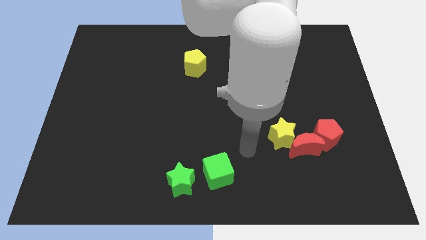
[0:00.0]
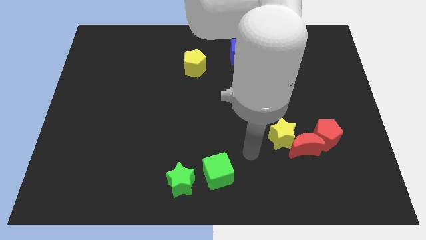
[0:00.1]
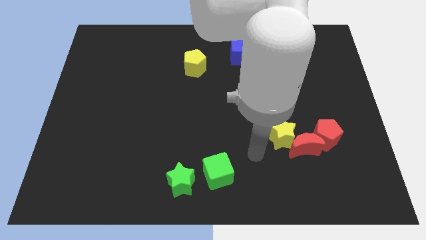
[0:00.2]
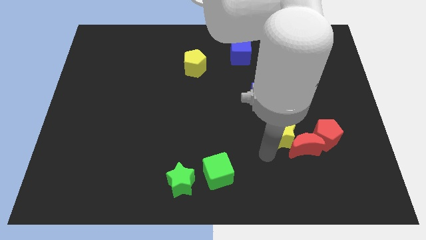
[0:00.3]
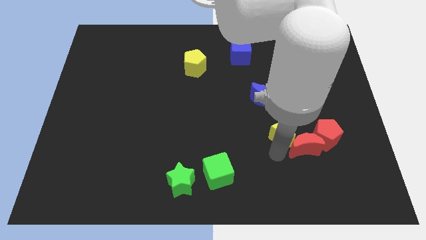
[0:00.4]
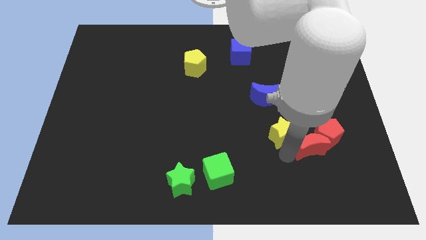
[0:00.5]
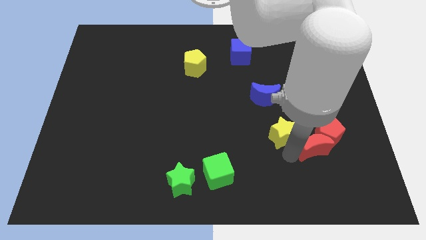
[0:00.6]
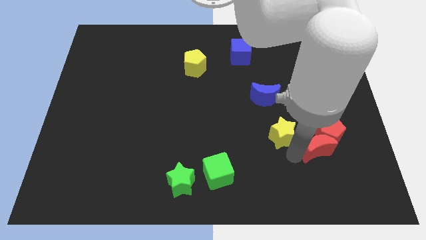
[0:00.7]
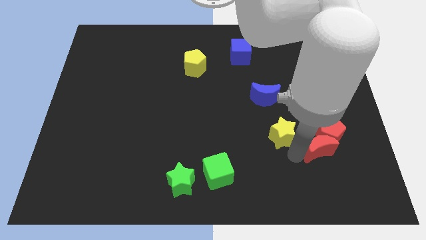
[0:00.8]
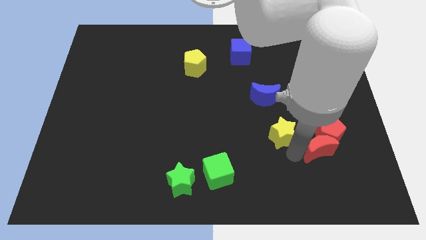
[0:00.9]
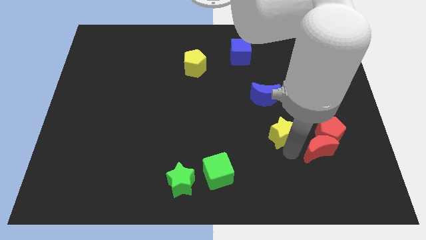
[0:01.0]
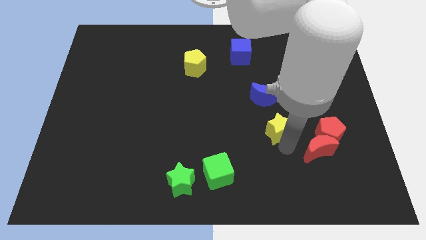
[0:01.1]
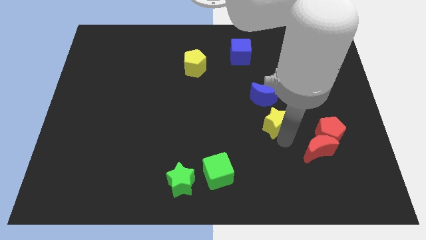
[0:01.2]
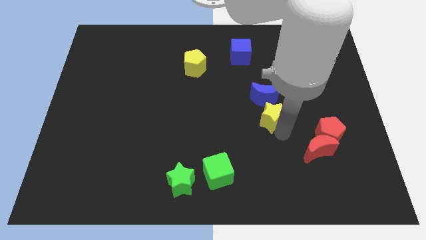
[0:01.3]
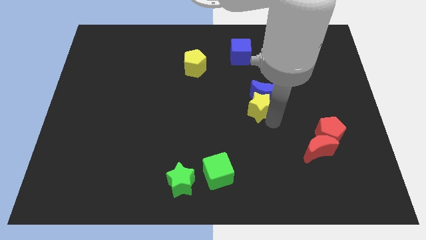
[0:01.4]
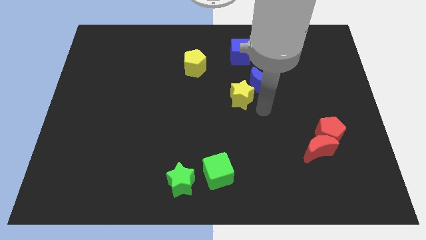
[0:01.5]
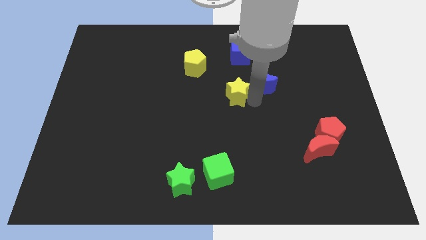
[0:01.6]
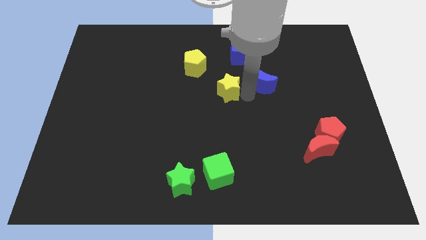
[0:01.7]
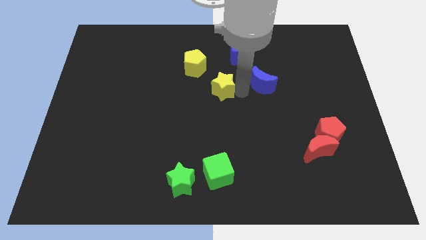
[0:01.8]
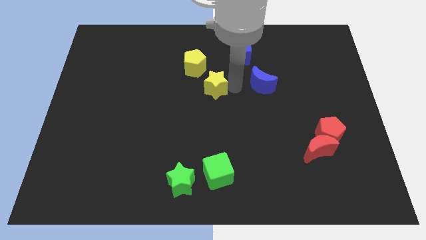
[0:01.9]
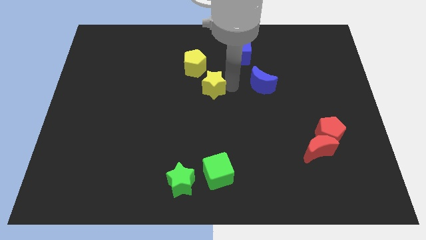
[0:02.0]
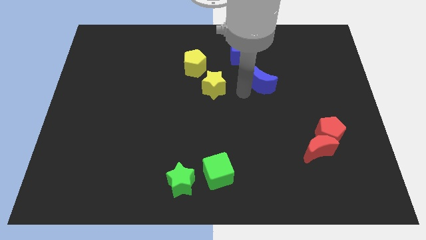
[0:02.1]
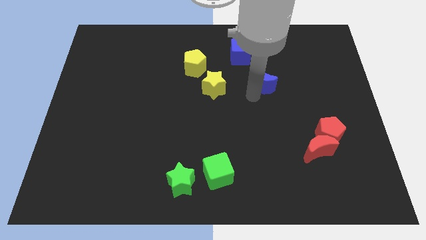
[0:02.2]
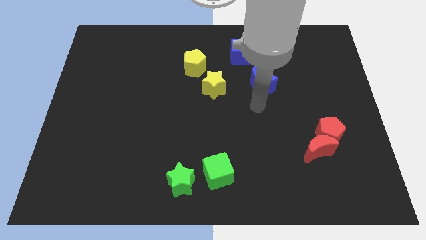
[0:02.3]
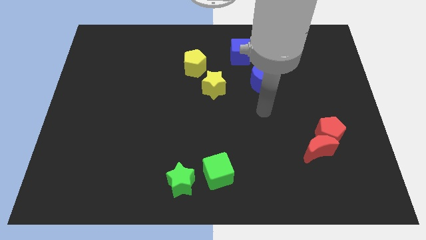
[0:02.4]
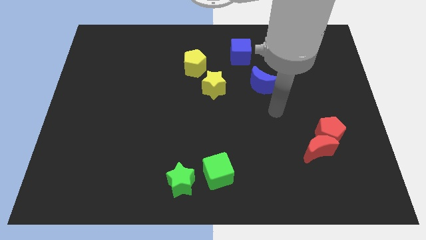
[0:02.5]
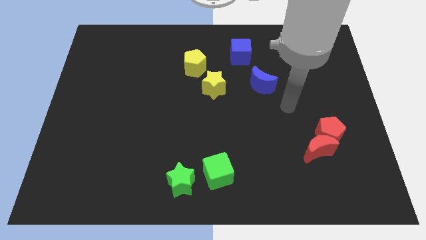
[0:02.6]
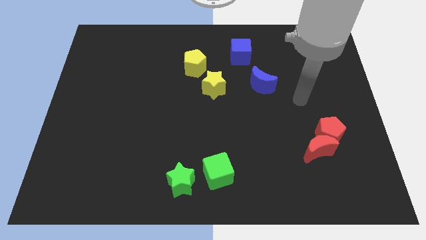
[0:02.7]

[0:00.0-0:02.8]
push yellow star towards yellow pentagon

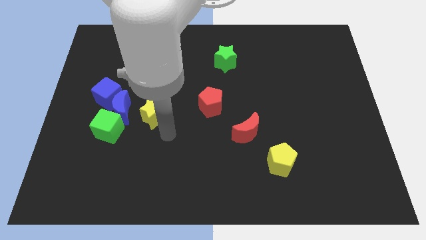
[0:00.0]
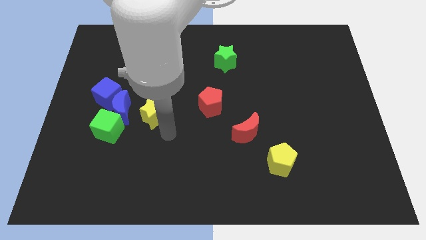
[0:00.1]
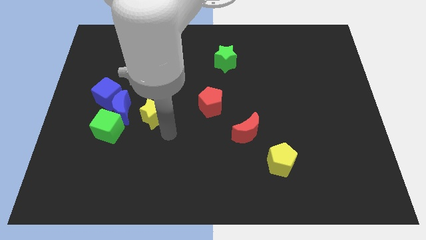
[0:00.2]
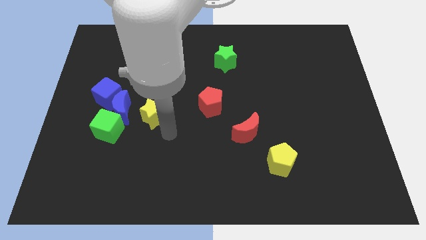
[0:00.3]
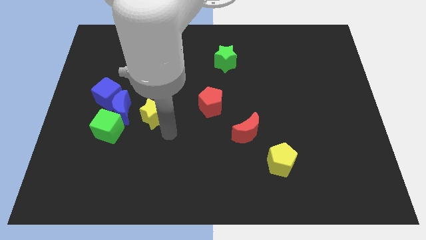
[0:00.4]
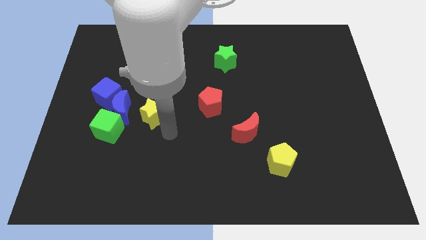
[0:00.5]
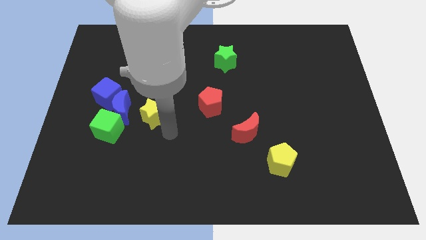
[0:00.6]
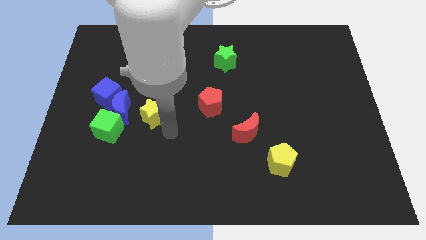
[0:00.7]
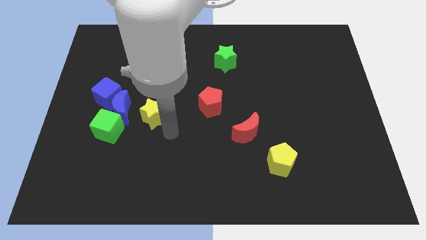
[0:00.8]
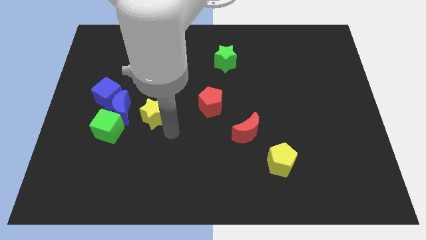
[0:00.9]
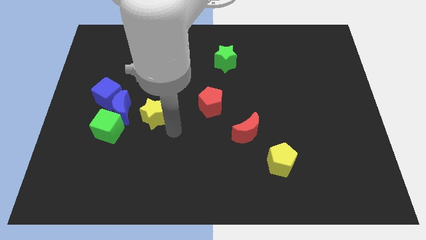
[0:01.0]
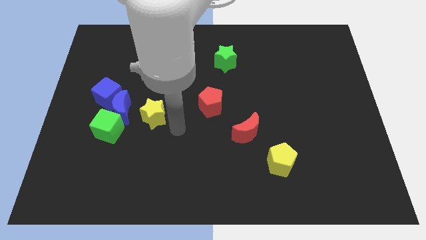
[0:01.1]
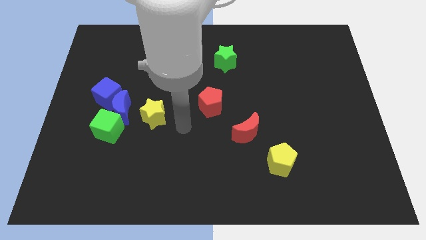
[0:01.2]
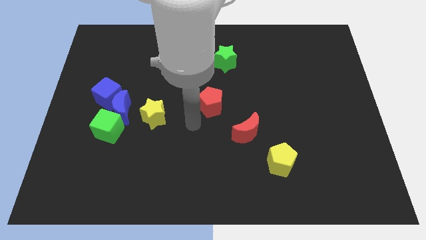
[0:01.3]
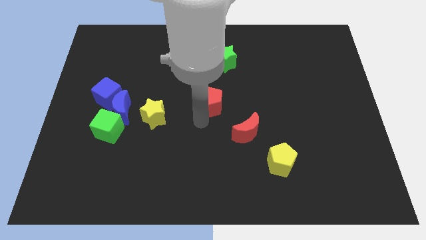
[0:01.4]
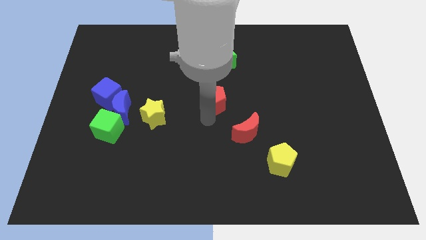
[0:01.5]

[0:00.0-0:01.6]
slightly push the red pentagon to the top of the board

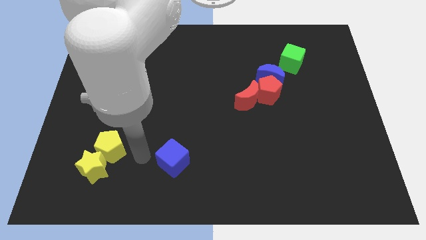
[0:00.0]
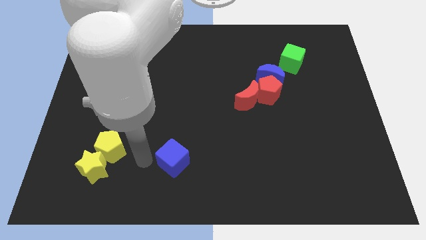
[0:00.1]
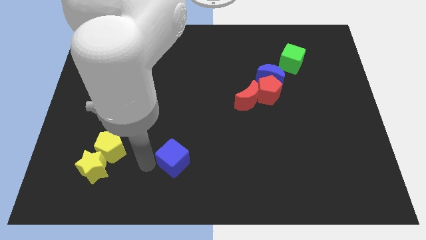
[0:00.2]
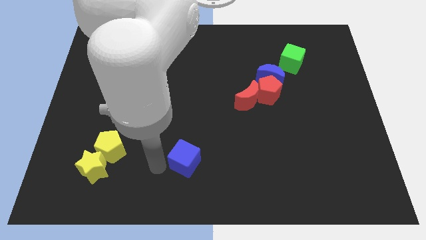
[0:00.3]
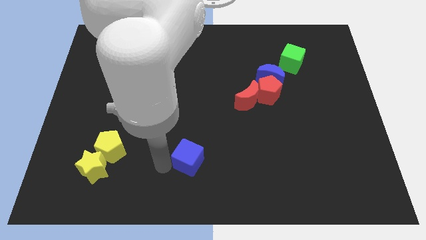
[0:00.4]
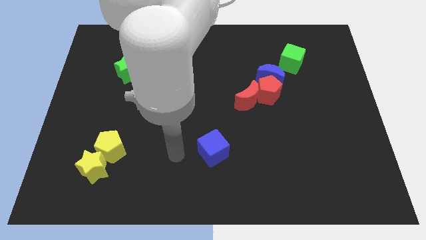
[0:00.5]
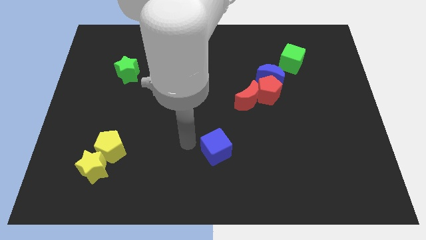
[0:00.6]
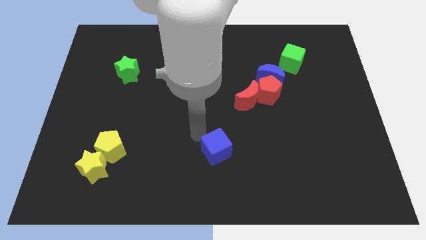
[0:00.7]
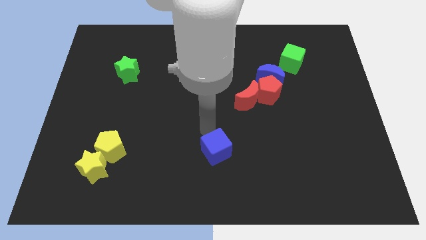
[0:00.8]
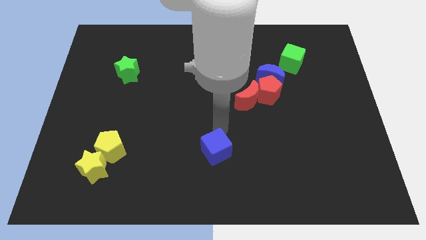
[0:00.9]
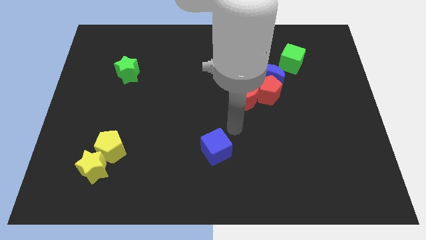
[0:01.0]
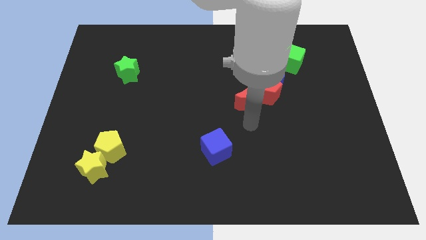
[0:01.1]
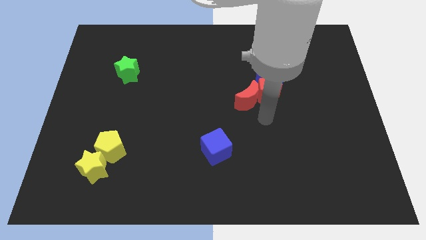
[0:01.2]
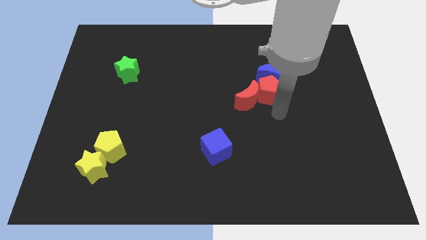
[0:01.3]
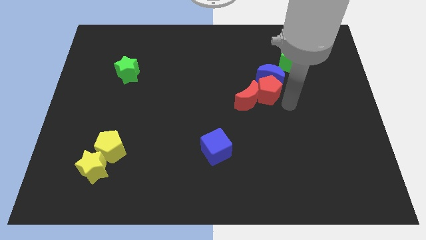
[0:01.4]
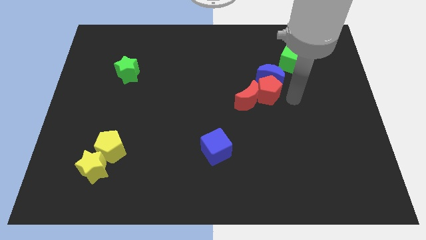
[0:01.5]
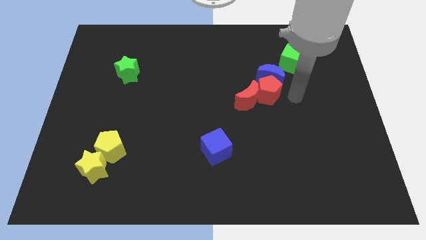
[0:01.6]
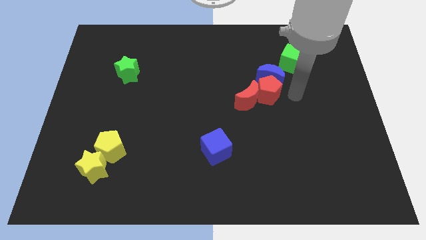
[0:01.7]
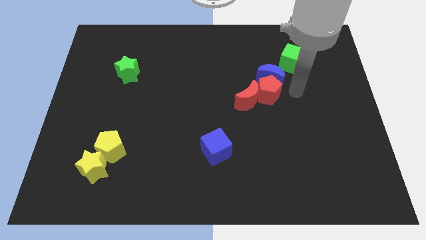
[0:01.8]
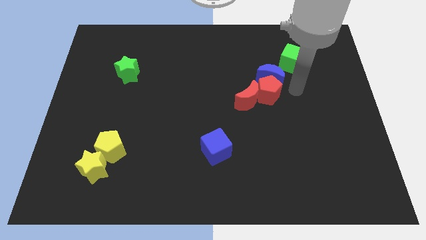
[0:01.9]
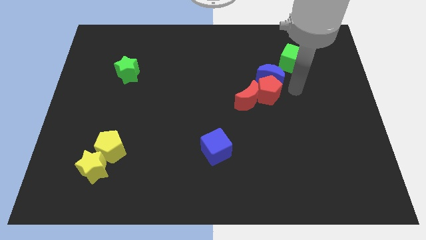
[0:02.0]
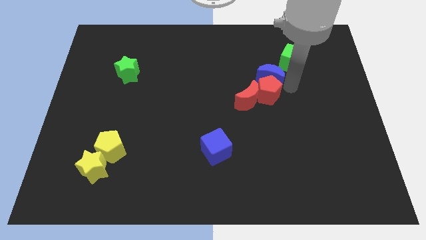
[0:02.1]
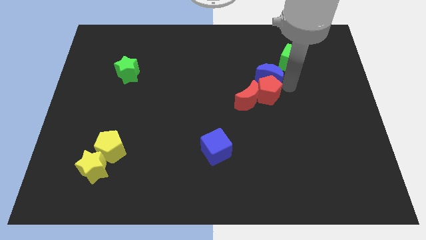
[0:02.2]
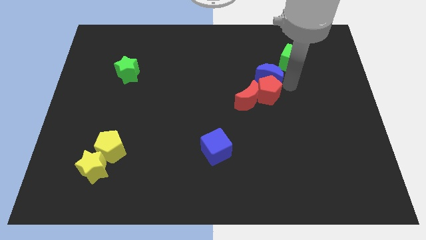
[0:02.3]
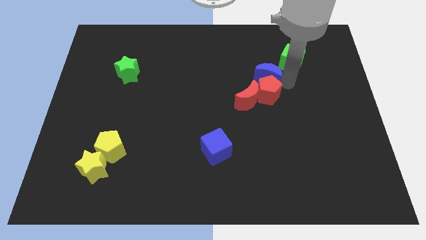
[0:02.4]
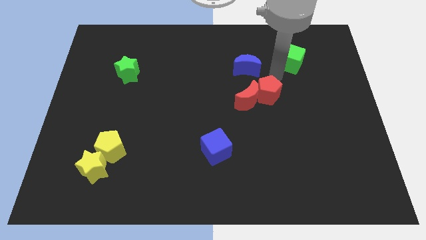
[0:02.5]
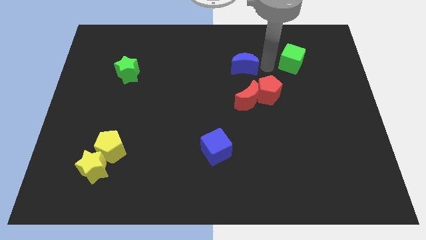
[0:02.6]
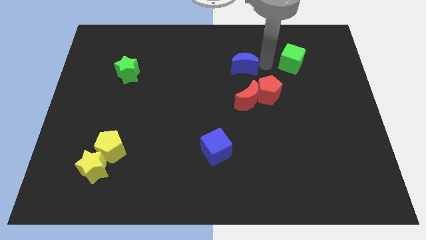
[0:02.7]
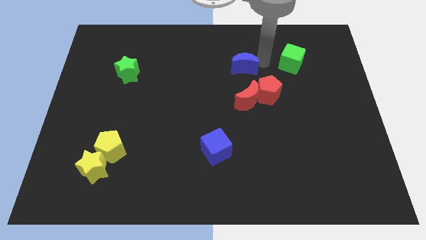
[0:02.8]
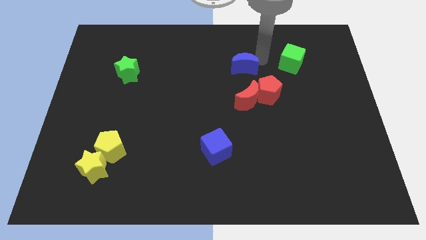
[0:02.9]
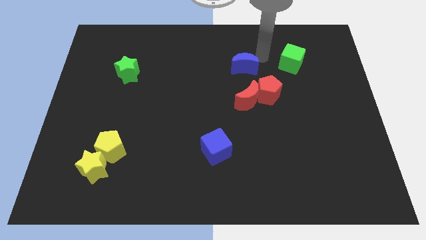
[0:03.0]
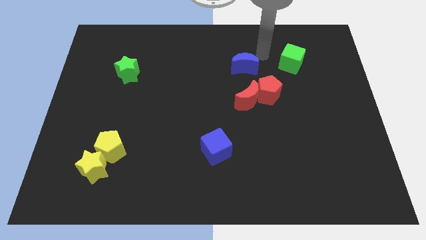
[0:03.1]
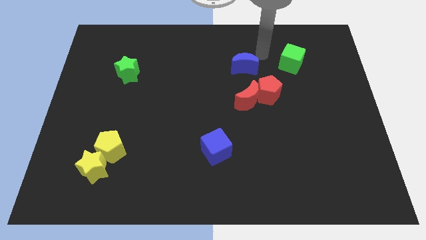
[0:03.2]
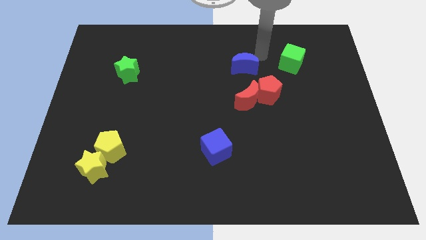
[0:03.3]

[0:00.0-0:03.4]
move both the blue blocks diagonal to each other

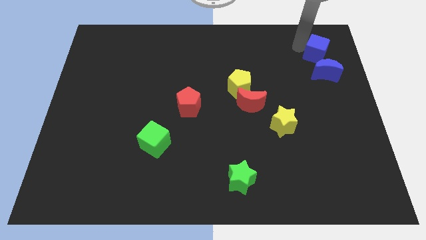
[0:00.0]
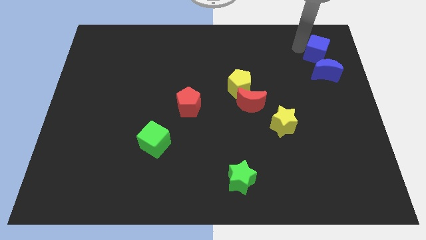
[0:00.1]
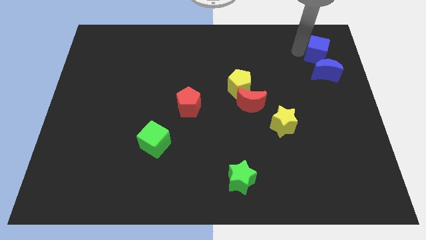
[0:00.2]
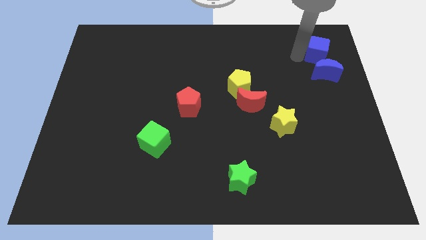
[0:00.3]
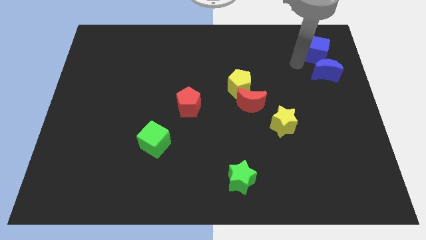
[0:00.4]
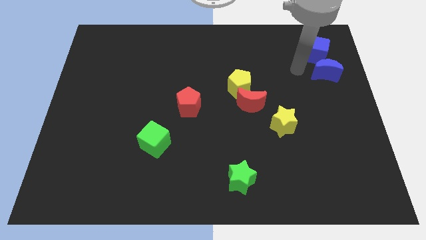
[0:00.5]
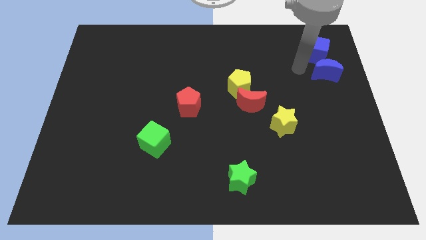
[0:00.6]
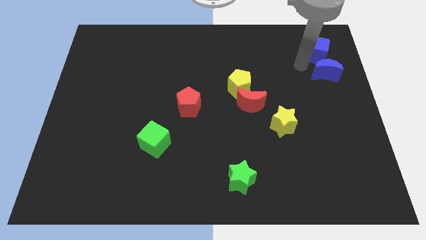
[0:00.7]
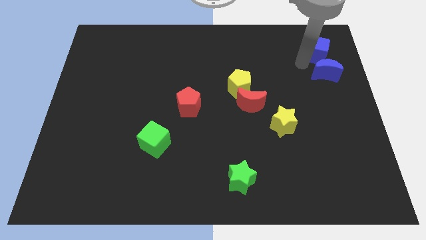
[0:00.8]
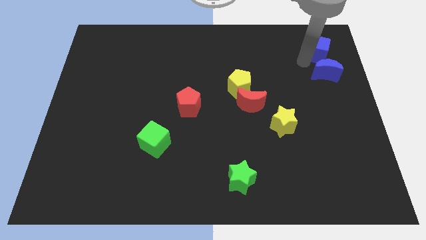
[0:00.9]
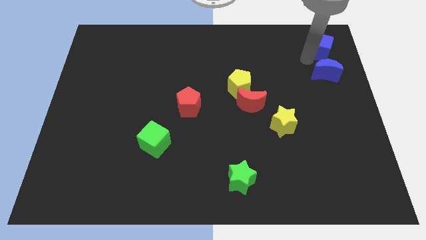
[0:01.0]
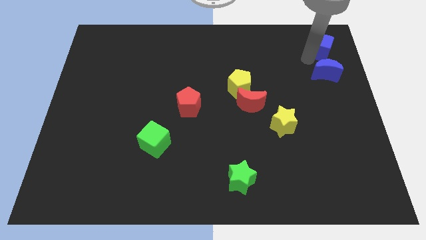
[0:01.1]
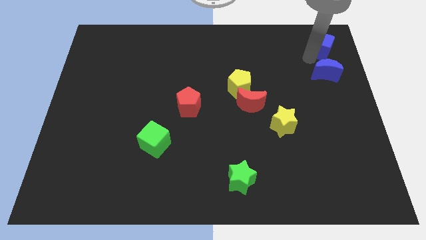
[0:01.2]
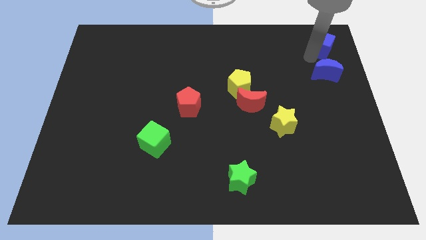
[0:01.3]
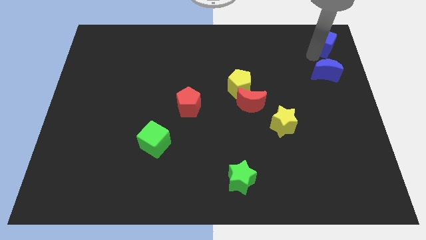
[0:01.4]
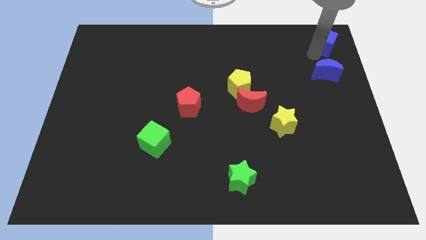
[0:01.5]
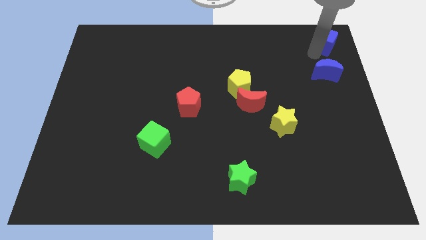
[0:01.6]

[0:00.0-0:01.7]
put the blue cube above the blue moon
